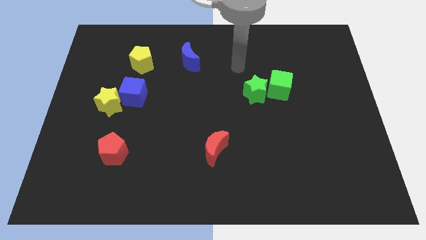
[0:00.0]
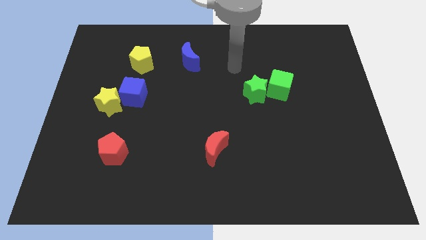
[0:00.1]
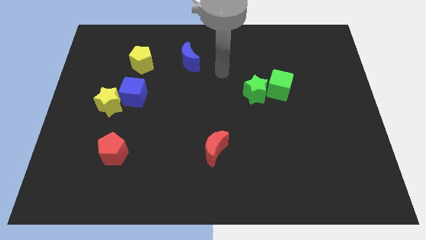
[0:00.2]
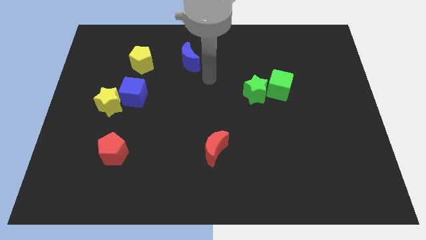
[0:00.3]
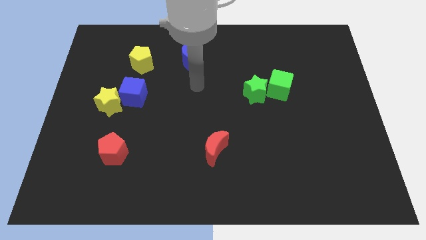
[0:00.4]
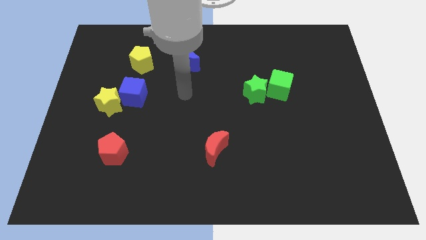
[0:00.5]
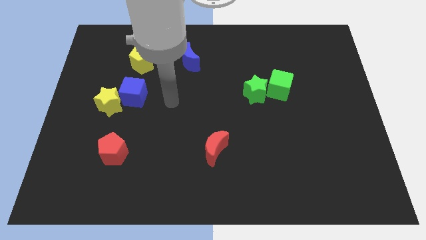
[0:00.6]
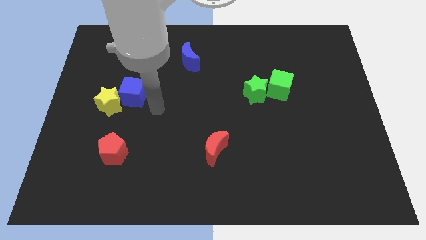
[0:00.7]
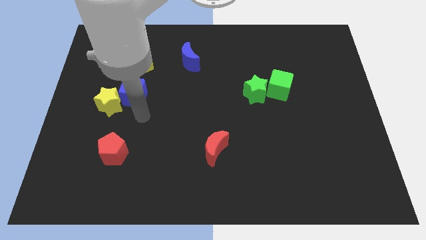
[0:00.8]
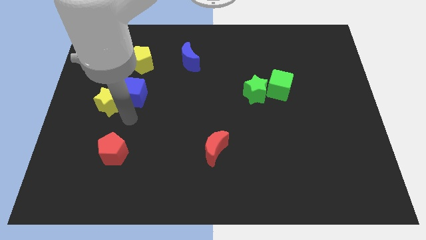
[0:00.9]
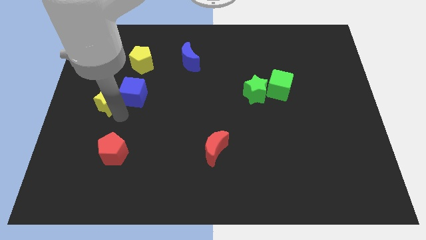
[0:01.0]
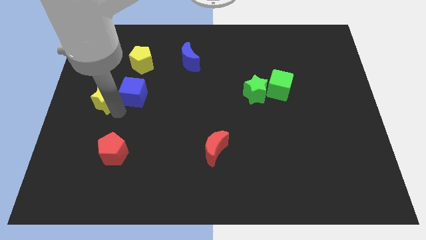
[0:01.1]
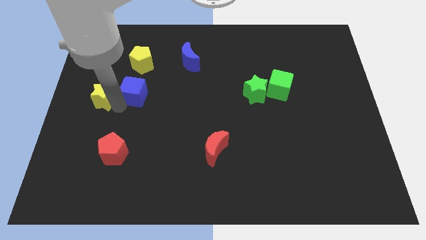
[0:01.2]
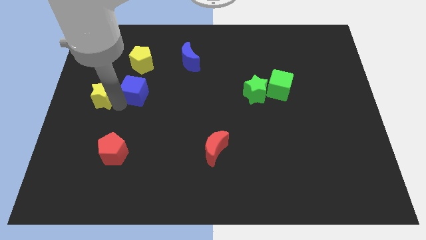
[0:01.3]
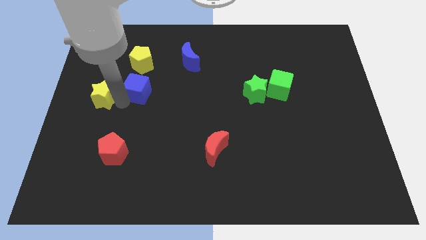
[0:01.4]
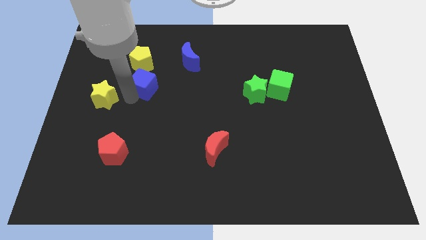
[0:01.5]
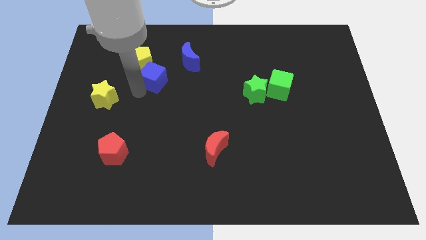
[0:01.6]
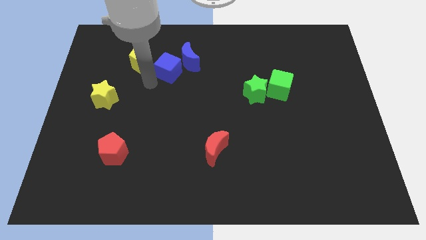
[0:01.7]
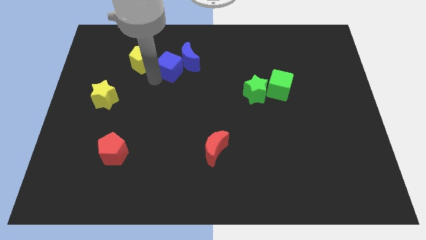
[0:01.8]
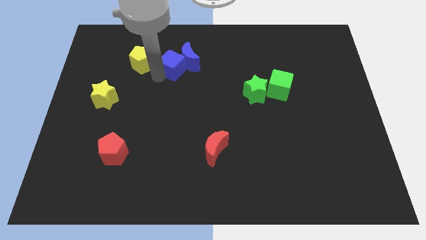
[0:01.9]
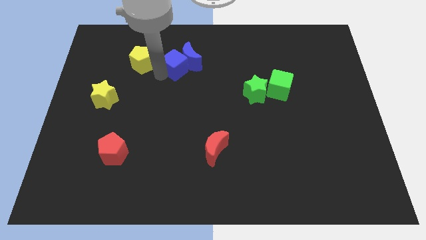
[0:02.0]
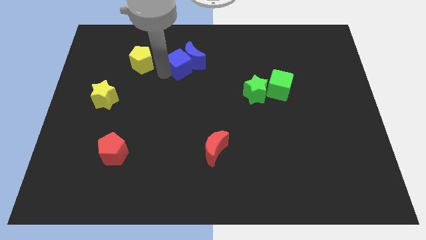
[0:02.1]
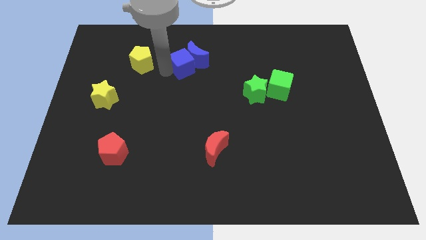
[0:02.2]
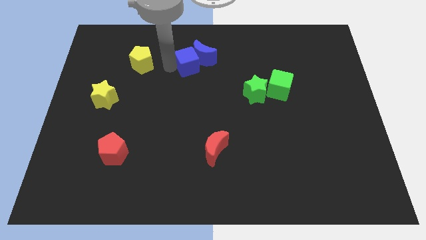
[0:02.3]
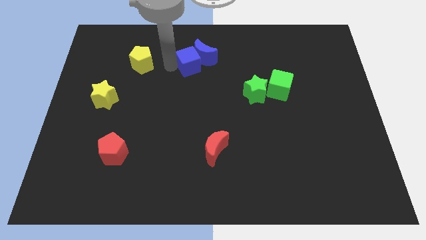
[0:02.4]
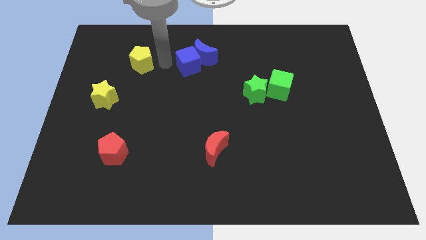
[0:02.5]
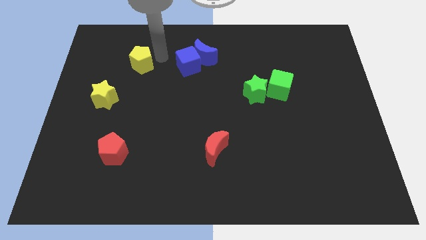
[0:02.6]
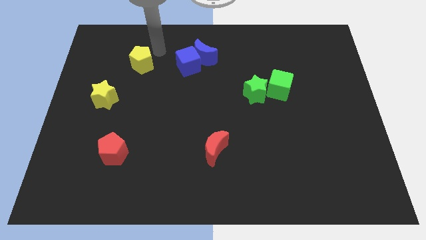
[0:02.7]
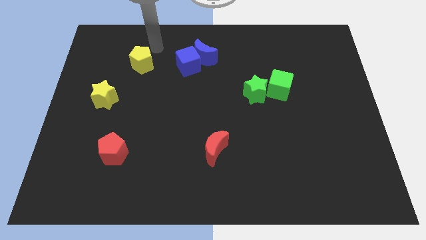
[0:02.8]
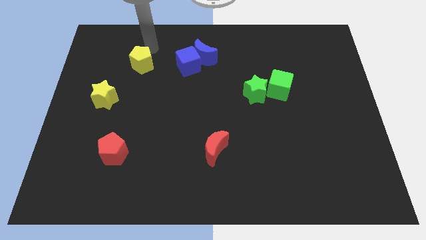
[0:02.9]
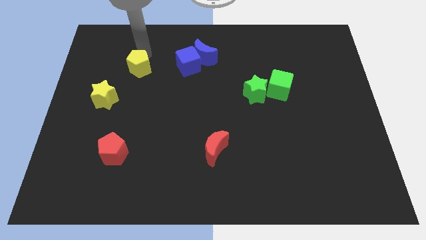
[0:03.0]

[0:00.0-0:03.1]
move blue cube close to the blue moon

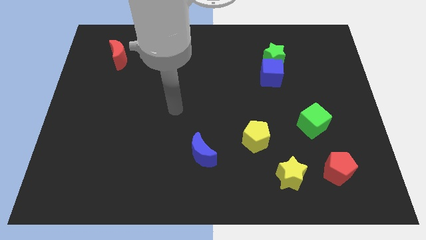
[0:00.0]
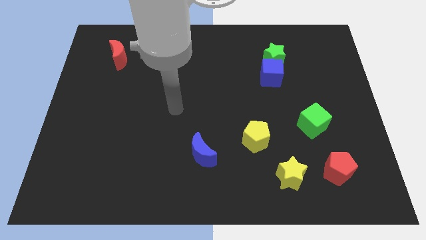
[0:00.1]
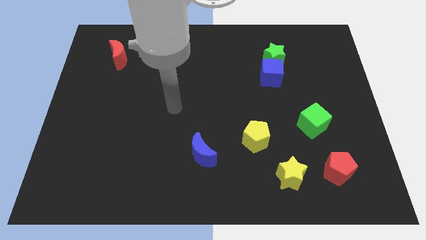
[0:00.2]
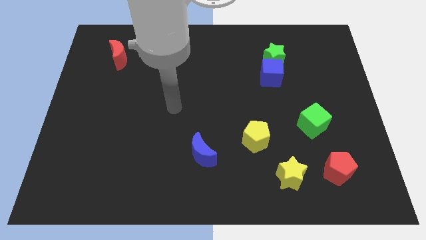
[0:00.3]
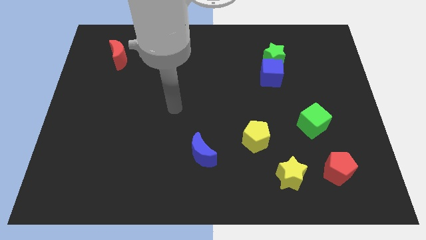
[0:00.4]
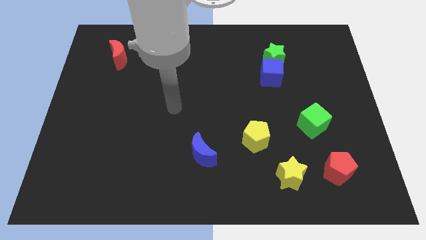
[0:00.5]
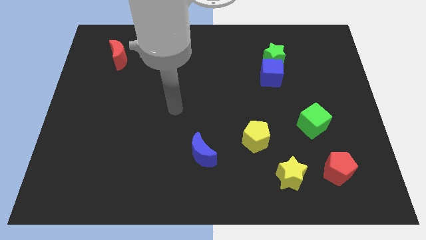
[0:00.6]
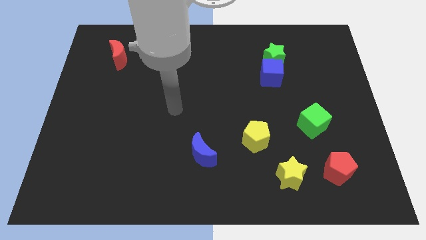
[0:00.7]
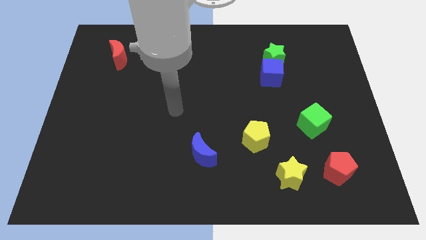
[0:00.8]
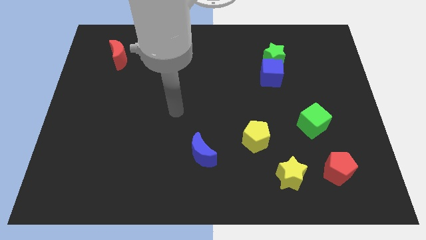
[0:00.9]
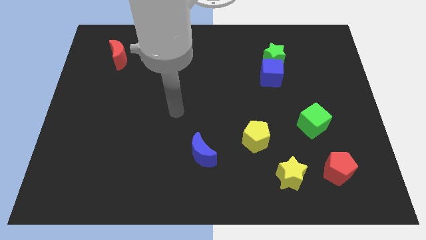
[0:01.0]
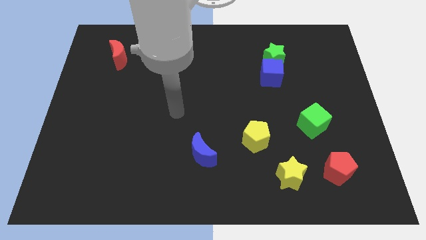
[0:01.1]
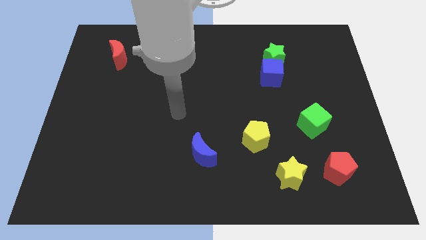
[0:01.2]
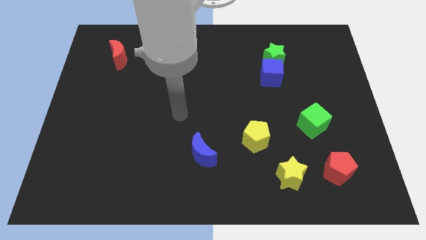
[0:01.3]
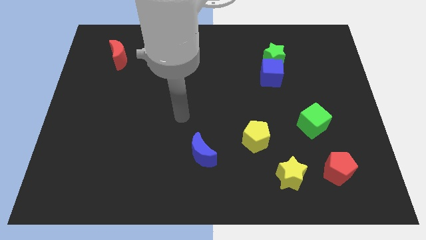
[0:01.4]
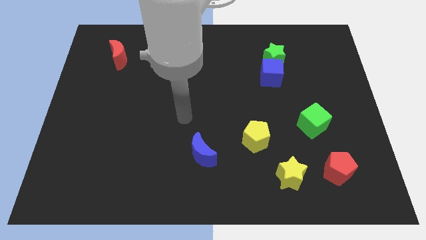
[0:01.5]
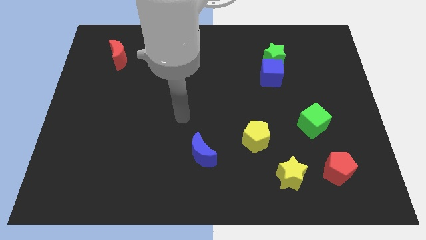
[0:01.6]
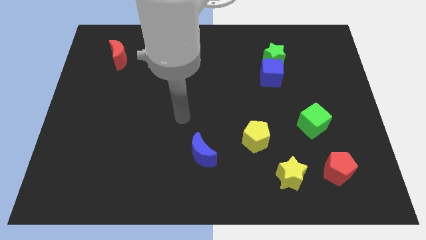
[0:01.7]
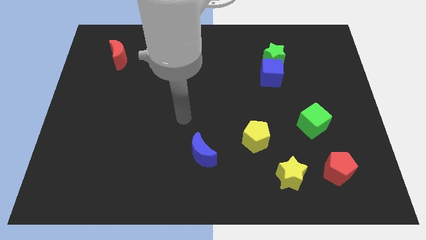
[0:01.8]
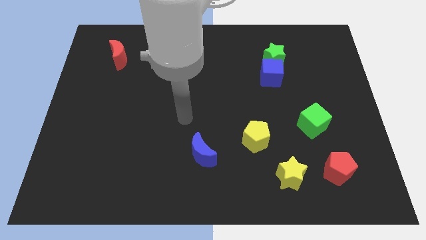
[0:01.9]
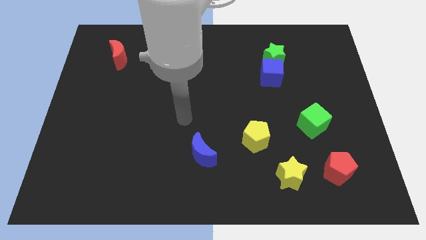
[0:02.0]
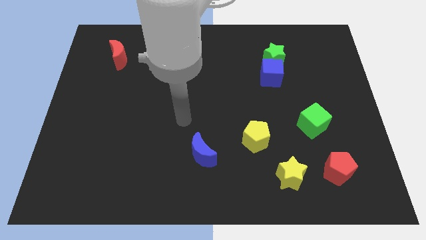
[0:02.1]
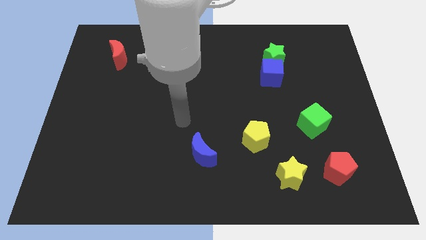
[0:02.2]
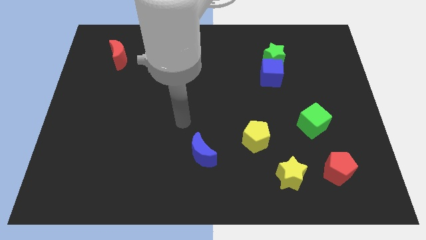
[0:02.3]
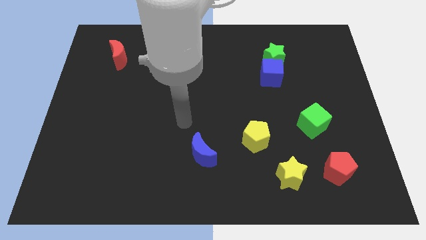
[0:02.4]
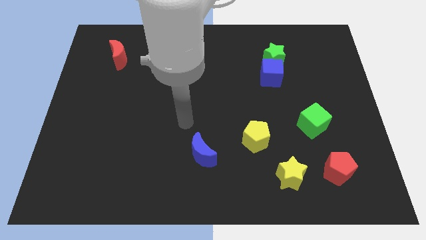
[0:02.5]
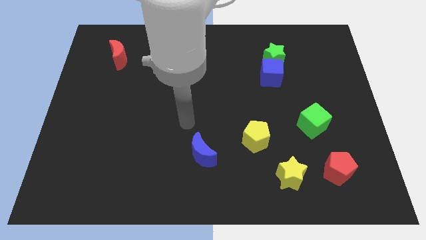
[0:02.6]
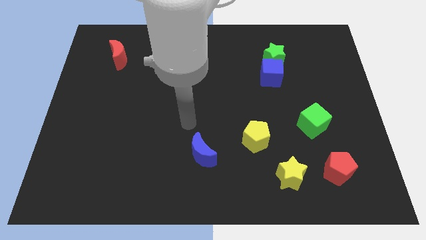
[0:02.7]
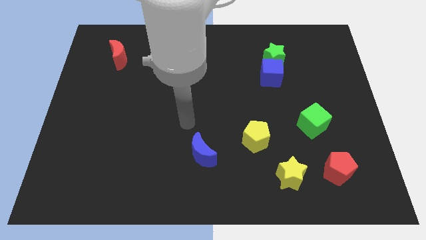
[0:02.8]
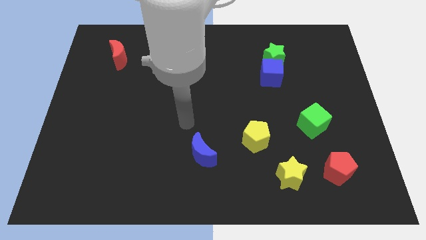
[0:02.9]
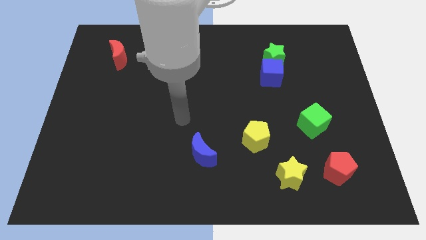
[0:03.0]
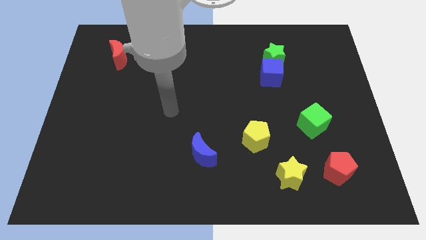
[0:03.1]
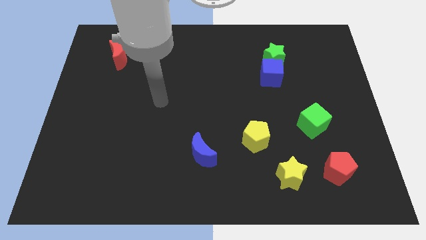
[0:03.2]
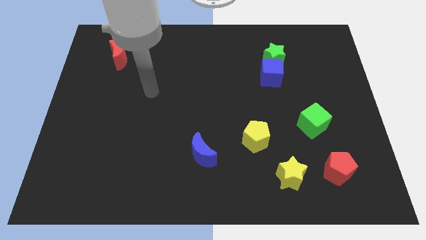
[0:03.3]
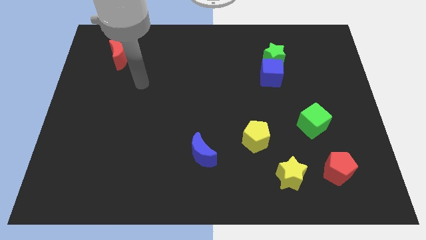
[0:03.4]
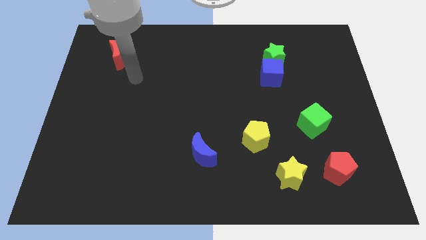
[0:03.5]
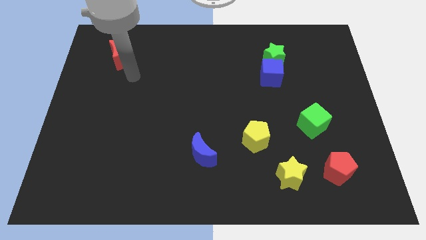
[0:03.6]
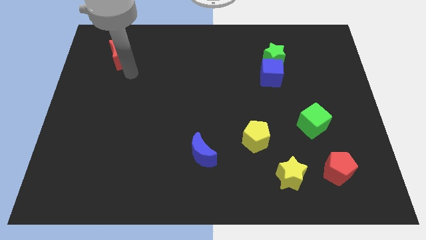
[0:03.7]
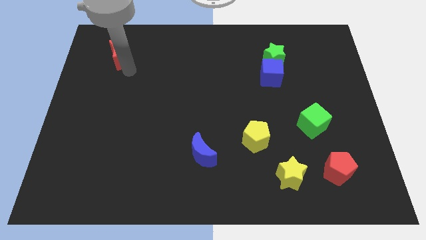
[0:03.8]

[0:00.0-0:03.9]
move your arm towards the red crescent

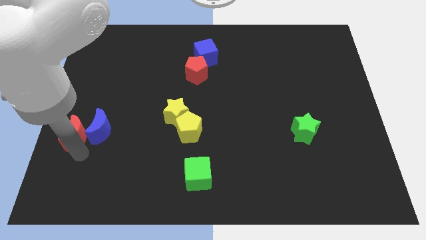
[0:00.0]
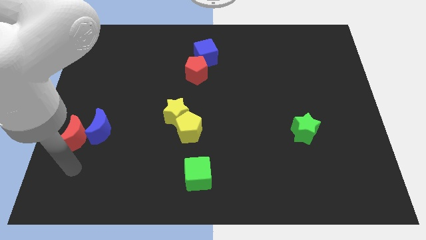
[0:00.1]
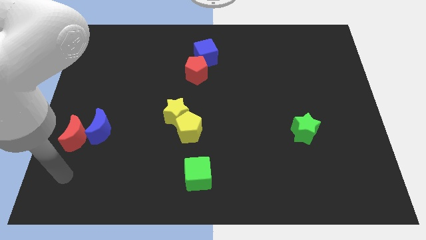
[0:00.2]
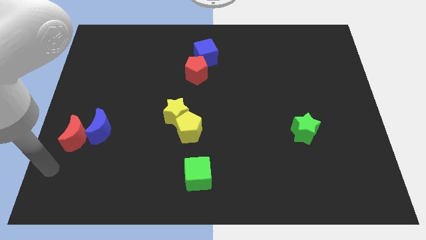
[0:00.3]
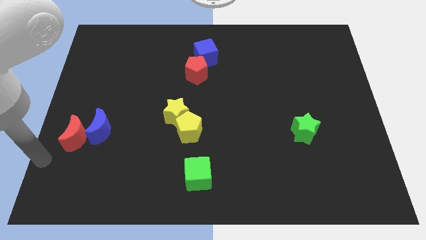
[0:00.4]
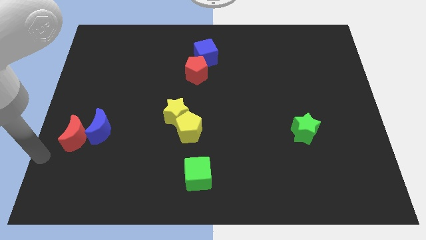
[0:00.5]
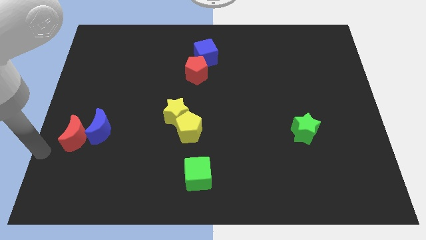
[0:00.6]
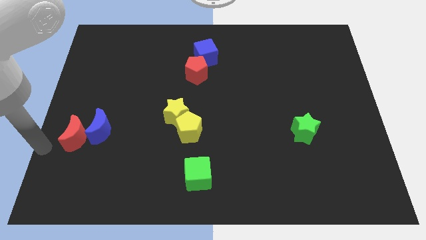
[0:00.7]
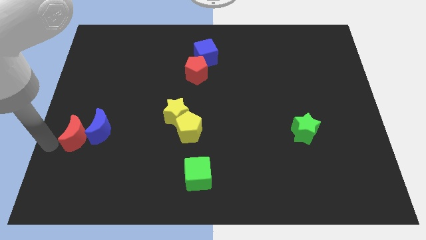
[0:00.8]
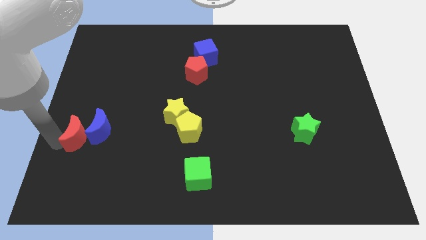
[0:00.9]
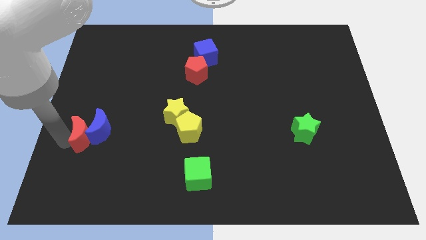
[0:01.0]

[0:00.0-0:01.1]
move your arm towards the red moon

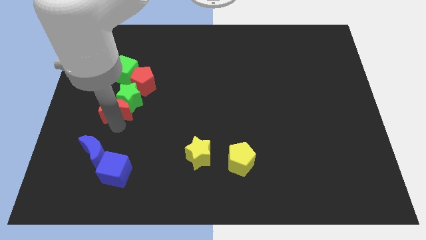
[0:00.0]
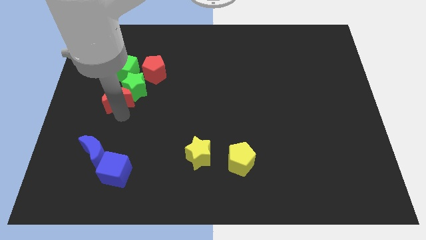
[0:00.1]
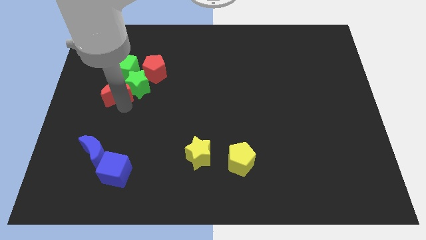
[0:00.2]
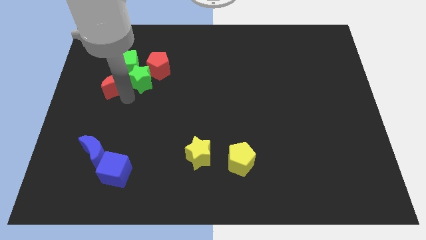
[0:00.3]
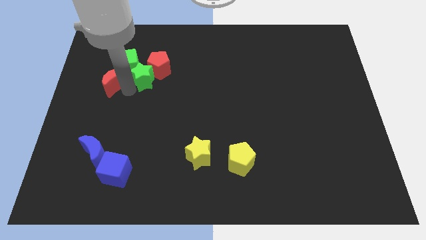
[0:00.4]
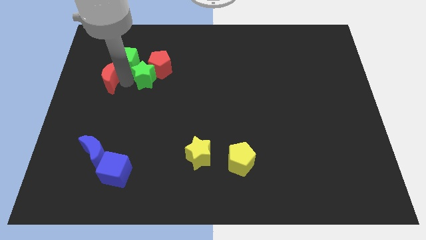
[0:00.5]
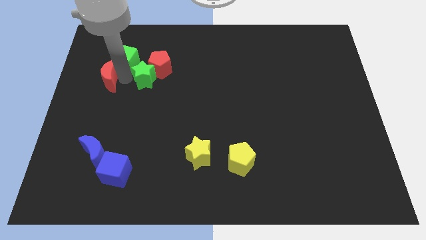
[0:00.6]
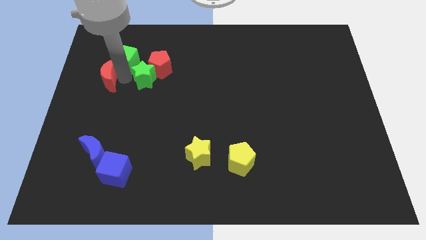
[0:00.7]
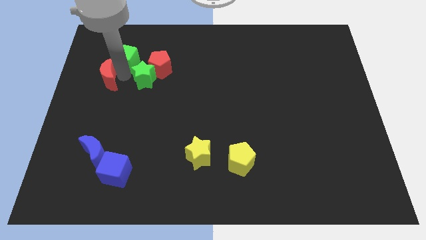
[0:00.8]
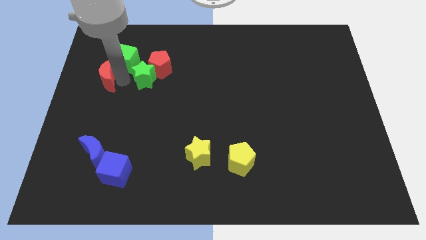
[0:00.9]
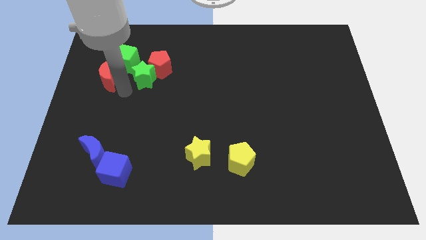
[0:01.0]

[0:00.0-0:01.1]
push the red crescent below the green cube
